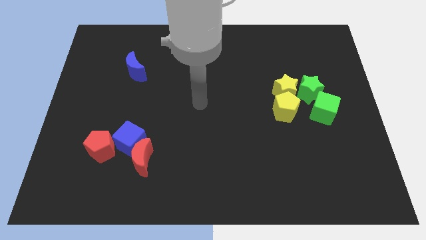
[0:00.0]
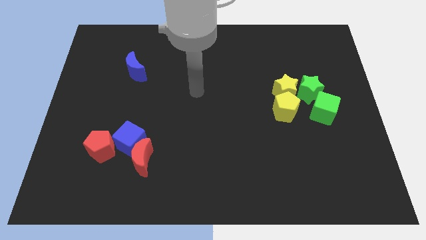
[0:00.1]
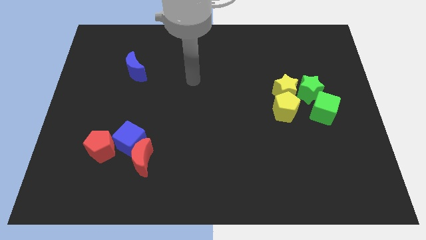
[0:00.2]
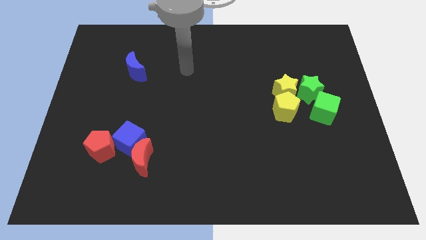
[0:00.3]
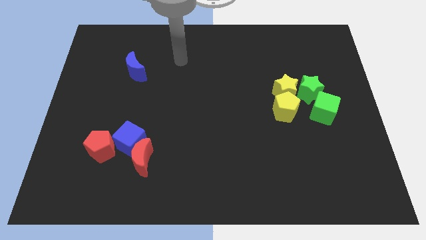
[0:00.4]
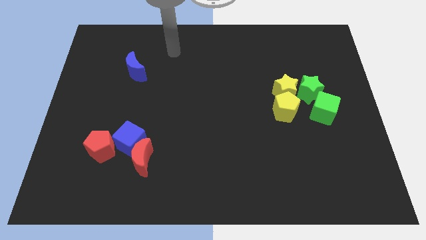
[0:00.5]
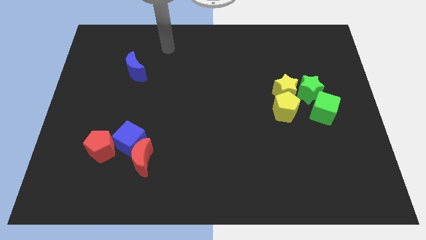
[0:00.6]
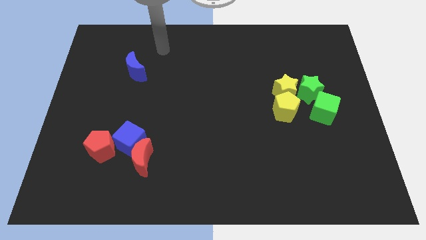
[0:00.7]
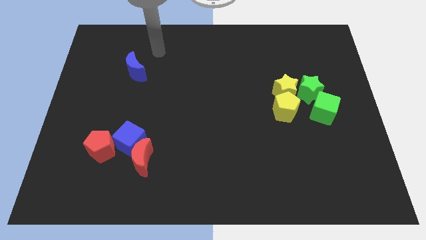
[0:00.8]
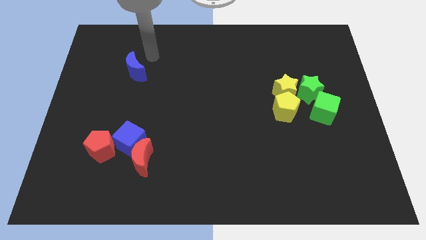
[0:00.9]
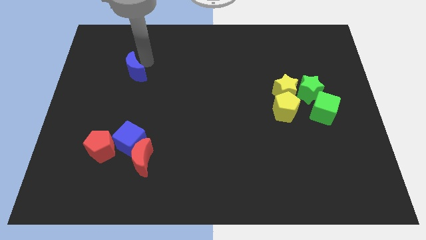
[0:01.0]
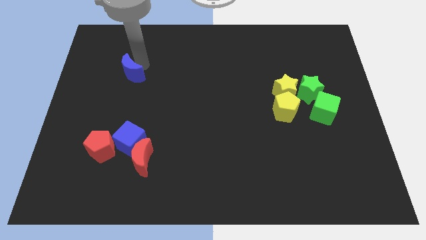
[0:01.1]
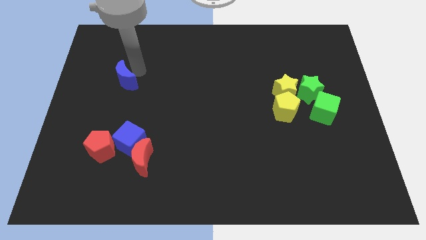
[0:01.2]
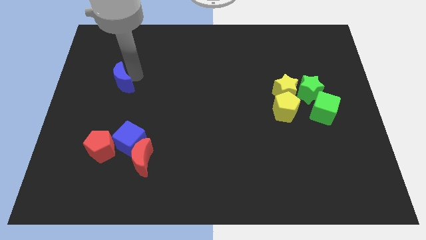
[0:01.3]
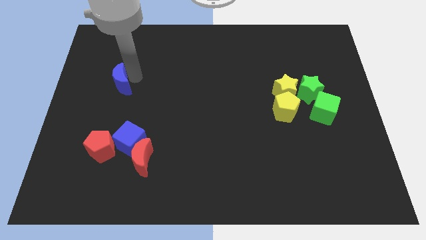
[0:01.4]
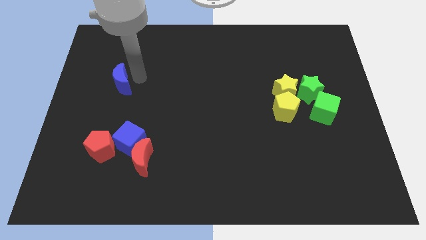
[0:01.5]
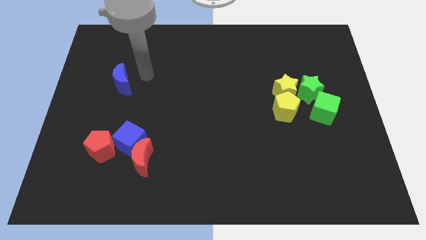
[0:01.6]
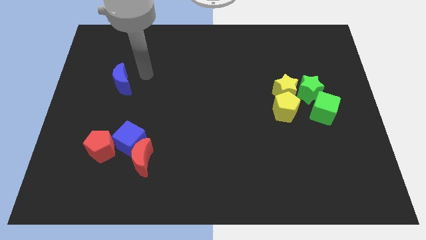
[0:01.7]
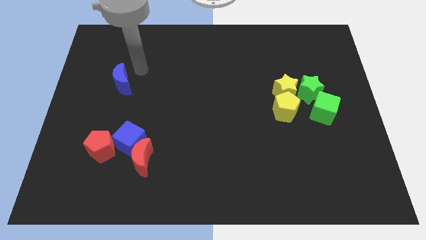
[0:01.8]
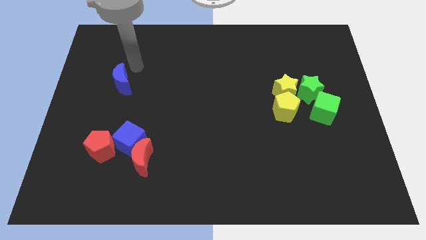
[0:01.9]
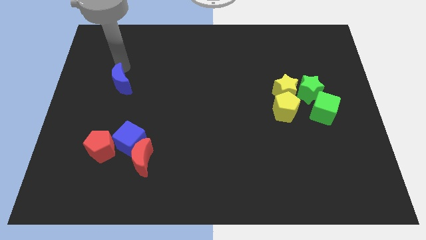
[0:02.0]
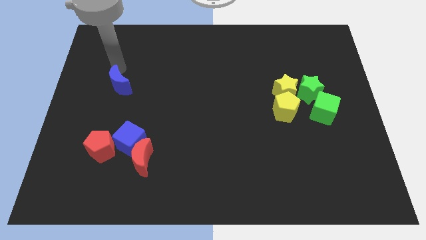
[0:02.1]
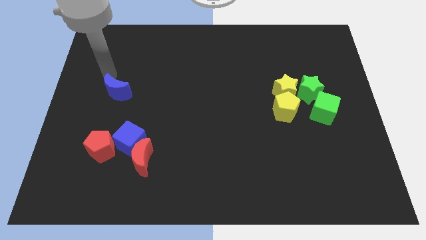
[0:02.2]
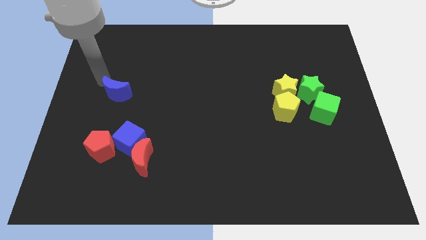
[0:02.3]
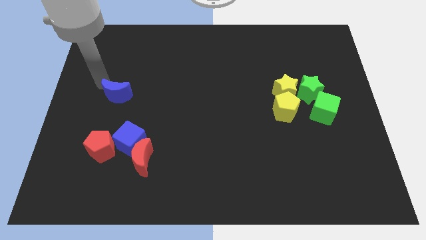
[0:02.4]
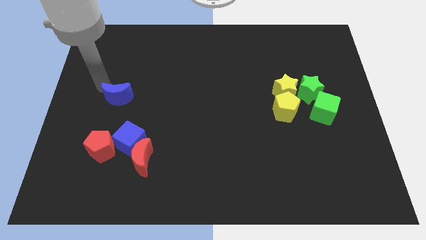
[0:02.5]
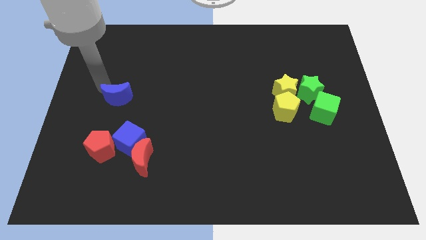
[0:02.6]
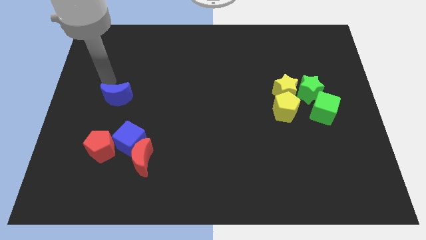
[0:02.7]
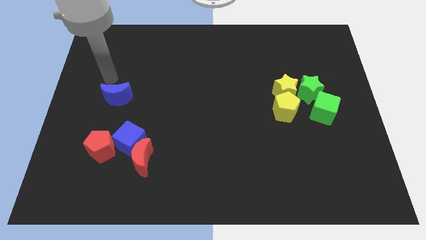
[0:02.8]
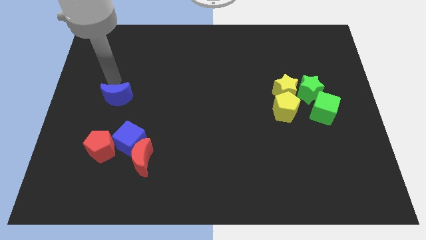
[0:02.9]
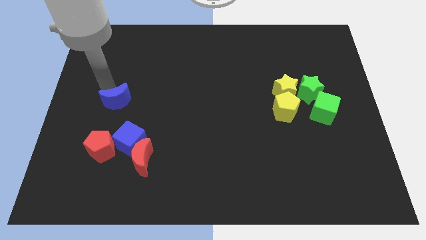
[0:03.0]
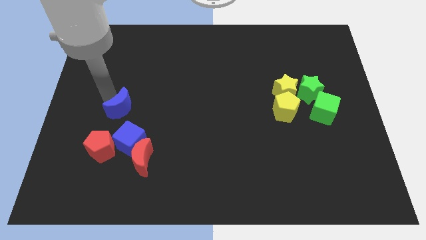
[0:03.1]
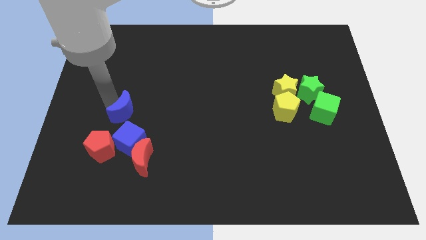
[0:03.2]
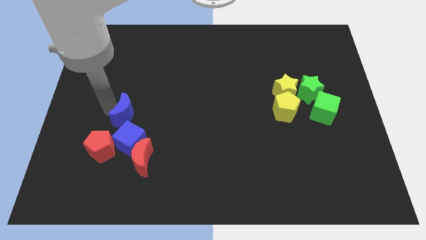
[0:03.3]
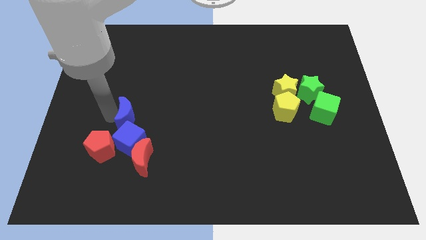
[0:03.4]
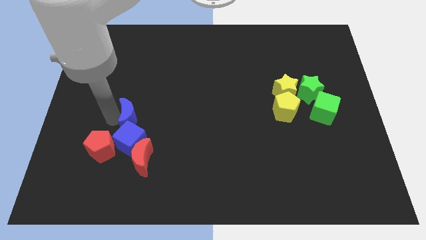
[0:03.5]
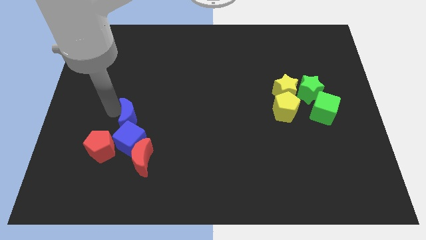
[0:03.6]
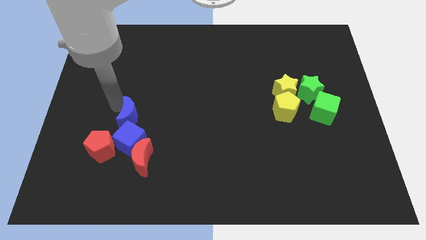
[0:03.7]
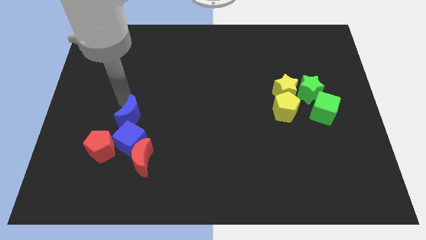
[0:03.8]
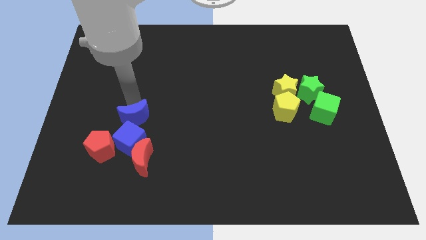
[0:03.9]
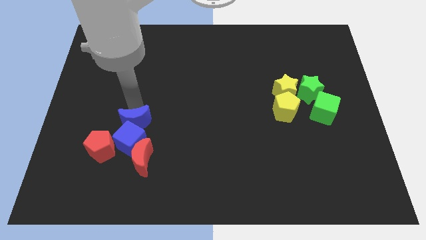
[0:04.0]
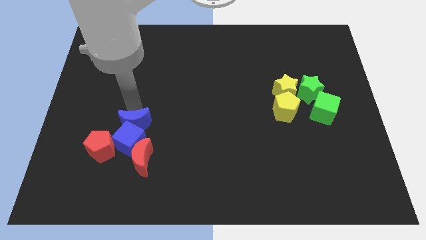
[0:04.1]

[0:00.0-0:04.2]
make the blue crescent to touch the blue cube

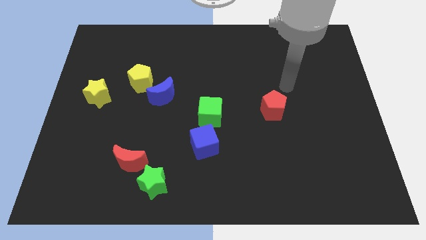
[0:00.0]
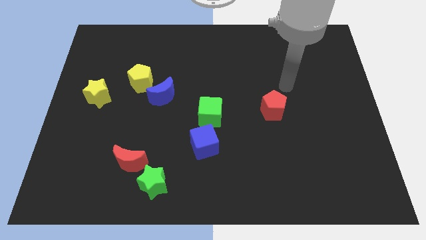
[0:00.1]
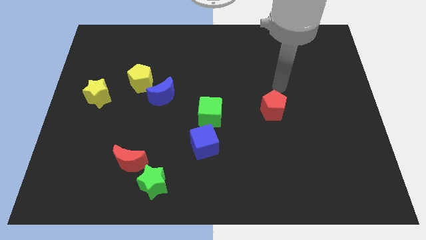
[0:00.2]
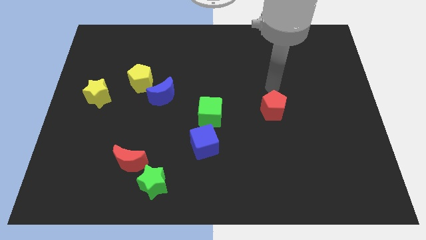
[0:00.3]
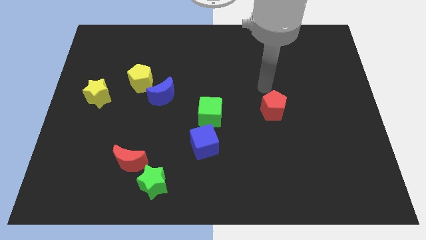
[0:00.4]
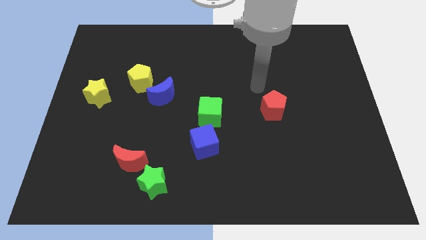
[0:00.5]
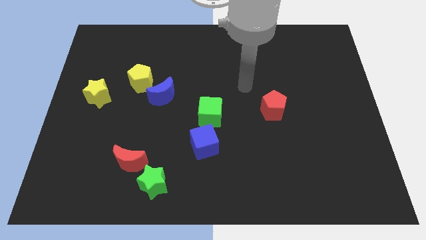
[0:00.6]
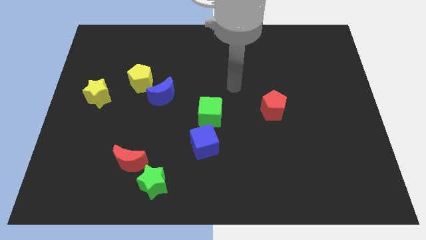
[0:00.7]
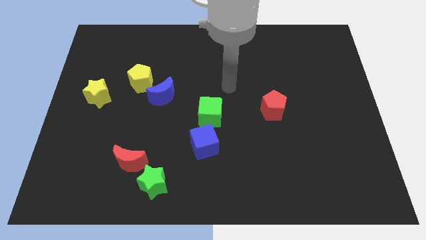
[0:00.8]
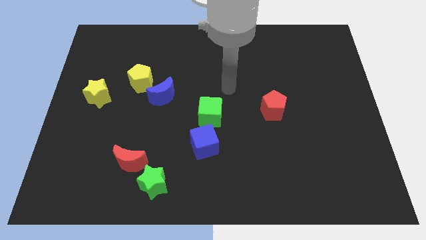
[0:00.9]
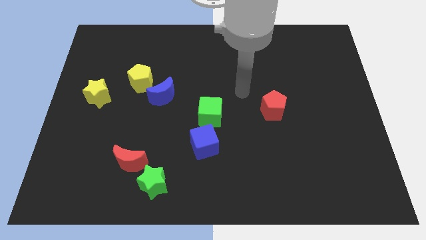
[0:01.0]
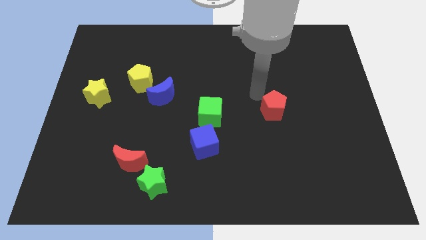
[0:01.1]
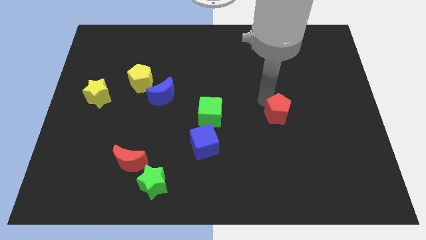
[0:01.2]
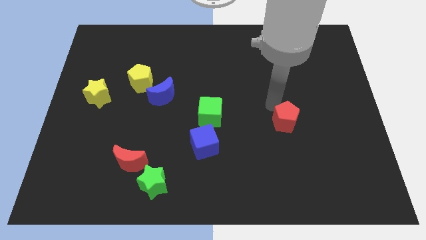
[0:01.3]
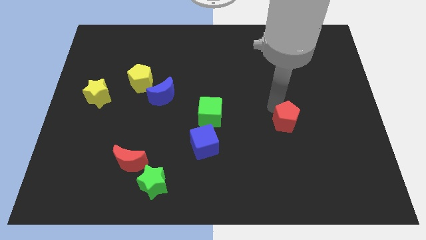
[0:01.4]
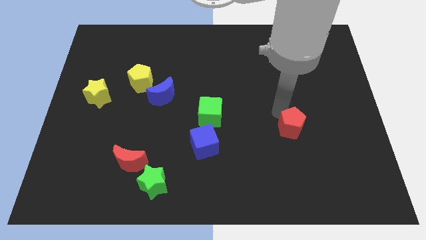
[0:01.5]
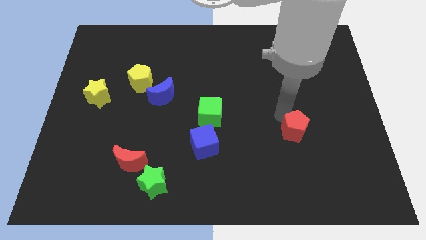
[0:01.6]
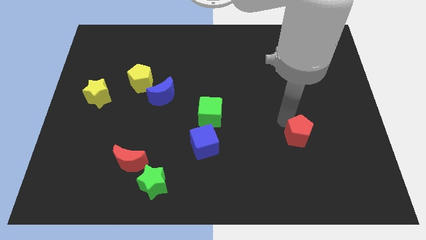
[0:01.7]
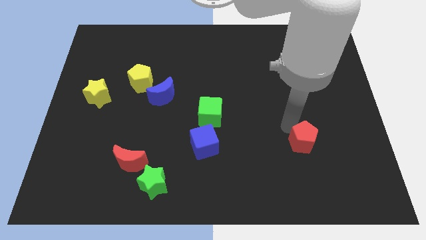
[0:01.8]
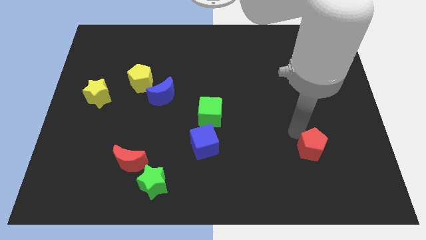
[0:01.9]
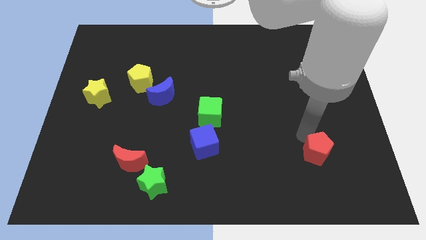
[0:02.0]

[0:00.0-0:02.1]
push the red pentagon towards the bottom right corner

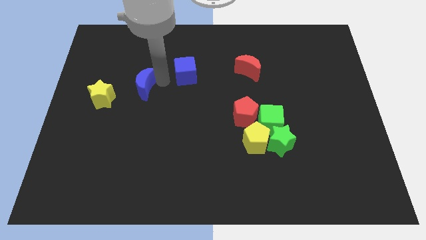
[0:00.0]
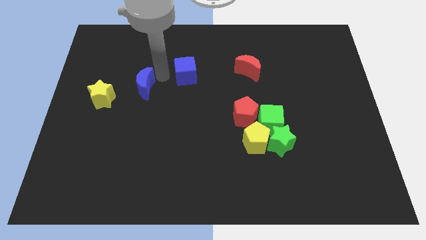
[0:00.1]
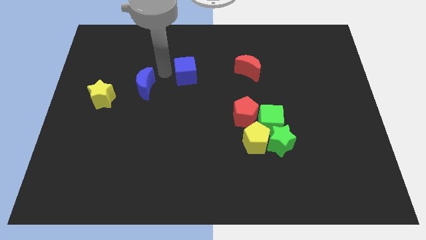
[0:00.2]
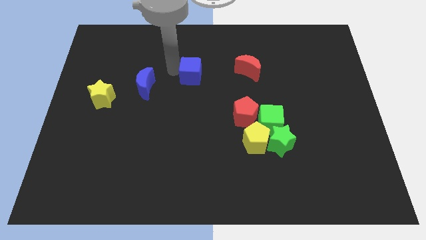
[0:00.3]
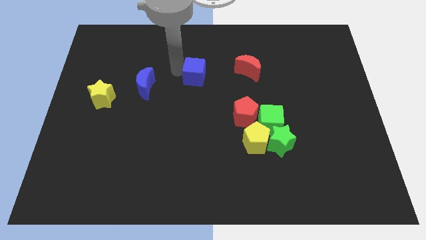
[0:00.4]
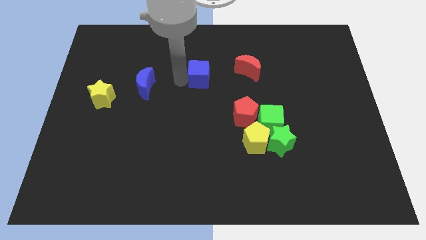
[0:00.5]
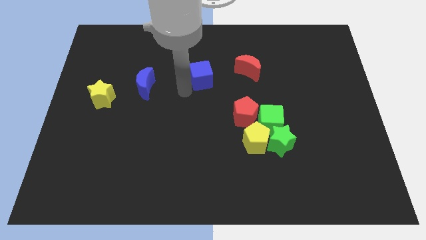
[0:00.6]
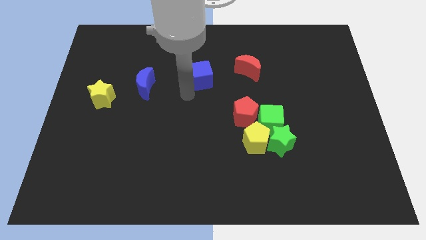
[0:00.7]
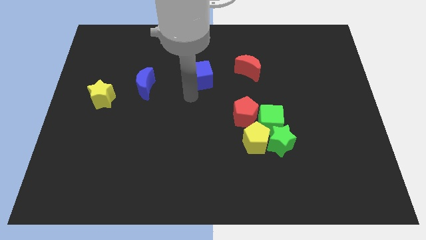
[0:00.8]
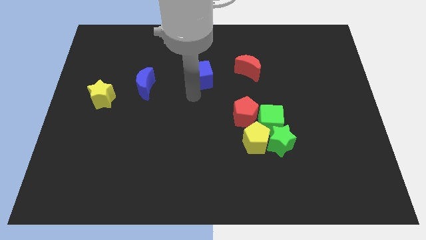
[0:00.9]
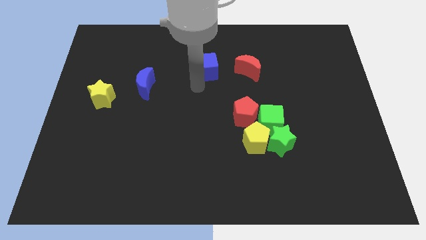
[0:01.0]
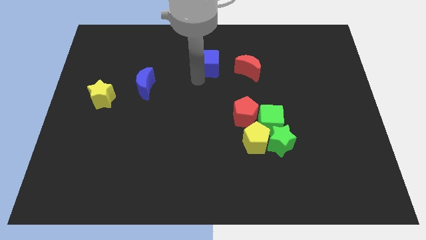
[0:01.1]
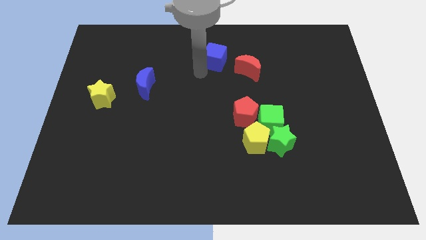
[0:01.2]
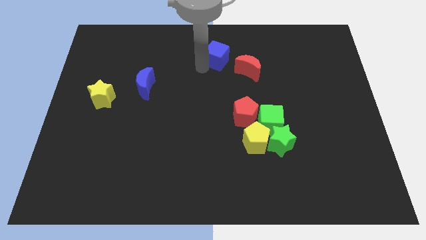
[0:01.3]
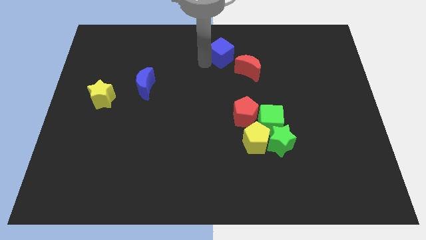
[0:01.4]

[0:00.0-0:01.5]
push the blue cube towards the top side of the board

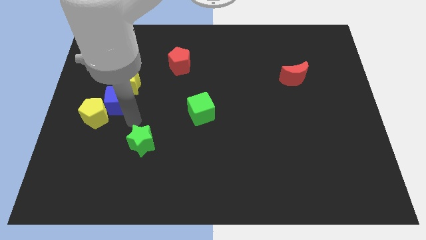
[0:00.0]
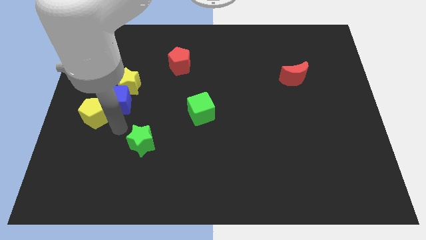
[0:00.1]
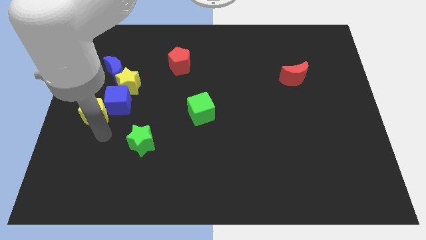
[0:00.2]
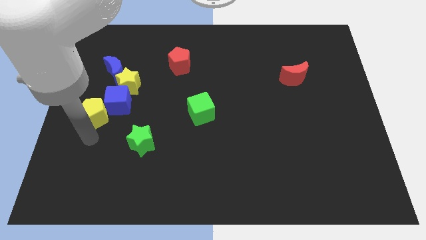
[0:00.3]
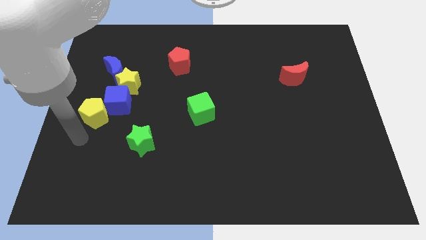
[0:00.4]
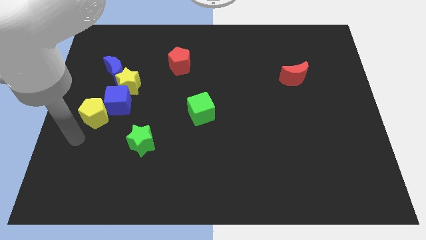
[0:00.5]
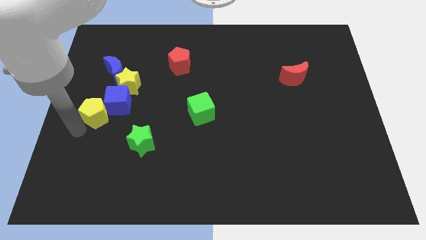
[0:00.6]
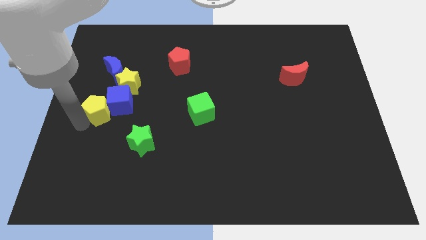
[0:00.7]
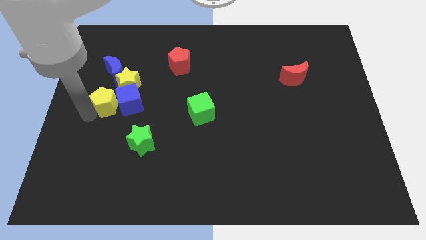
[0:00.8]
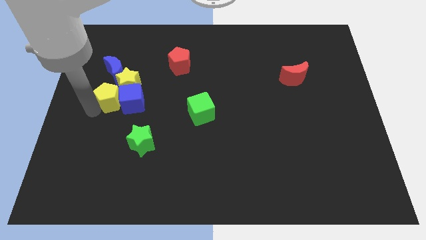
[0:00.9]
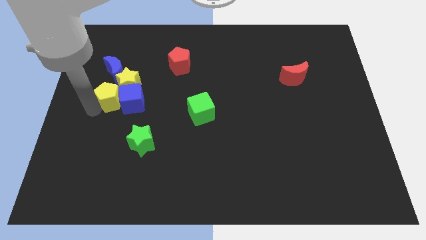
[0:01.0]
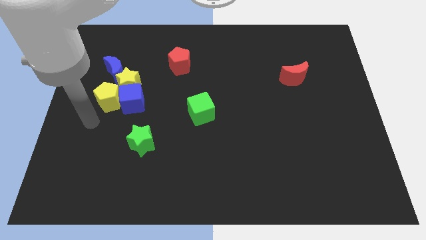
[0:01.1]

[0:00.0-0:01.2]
place yellow pentagon to the left of blue cube
